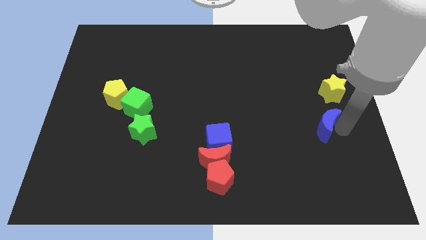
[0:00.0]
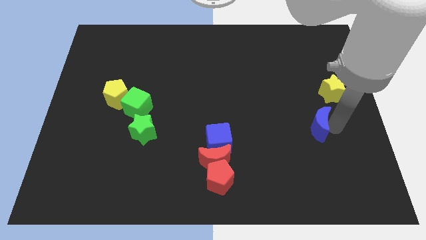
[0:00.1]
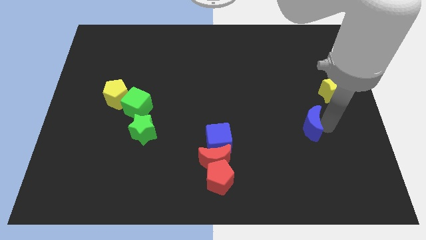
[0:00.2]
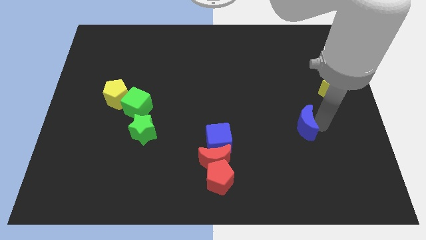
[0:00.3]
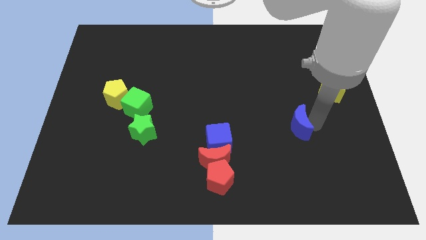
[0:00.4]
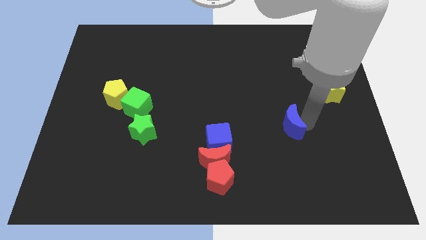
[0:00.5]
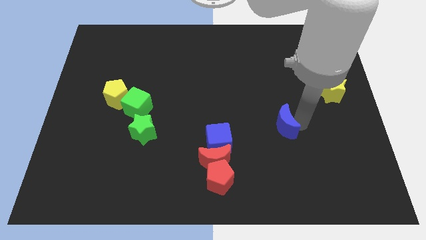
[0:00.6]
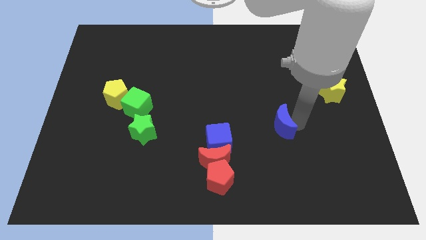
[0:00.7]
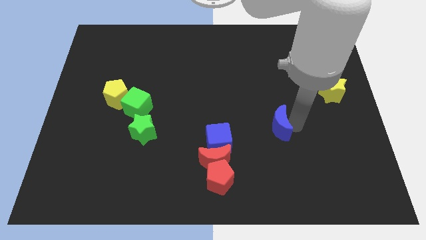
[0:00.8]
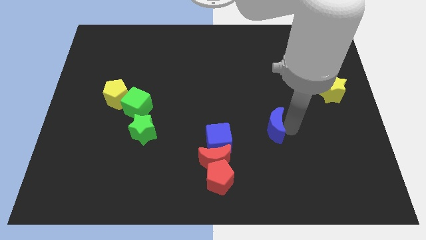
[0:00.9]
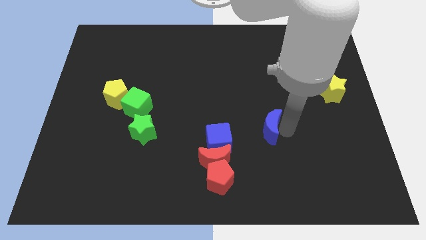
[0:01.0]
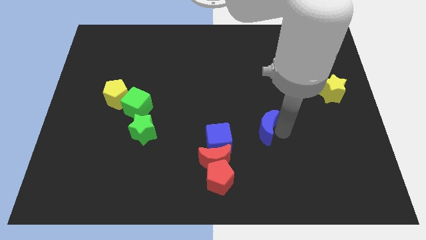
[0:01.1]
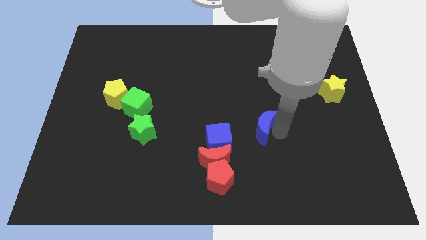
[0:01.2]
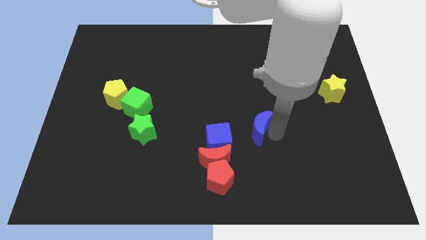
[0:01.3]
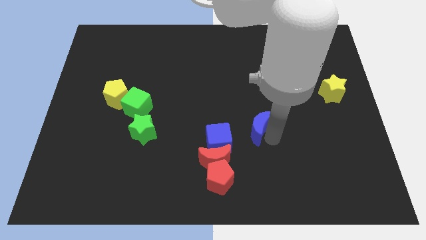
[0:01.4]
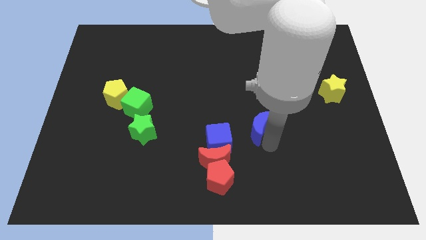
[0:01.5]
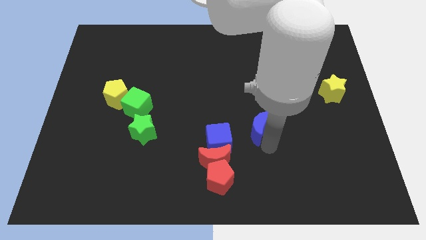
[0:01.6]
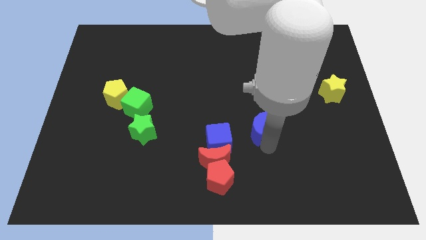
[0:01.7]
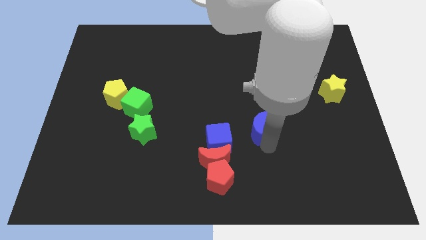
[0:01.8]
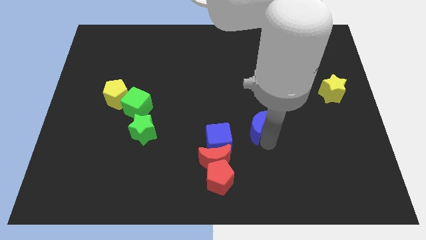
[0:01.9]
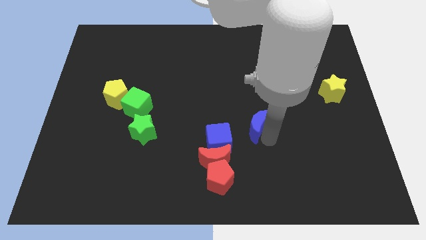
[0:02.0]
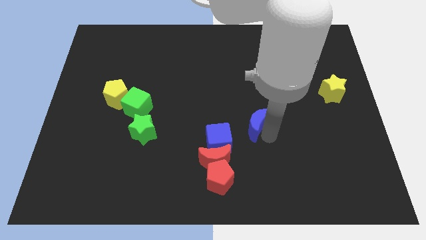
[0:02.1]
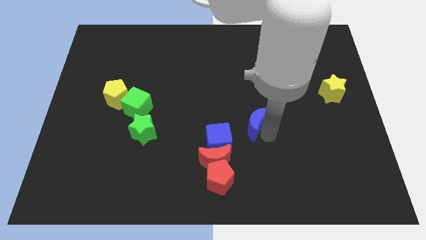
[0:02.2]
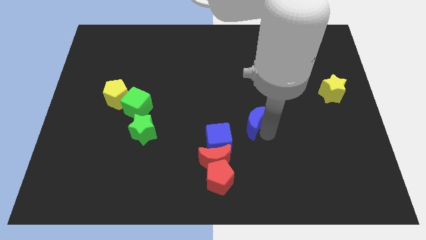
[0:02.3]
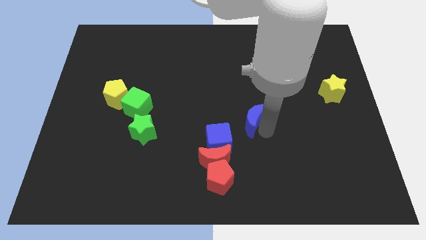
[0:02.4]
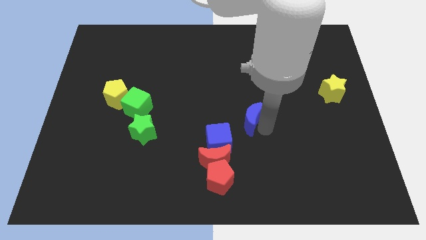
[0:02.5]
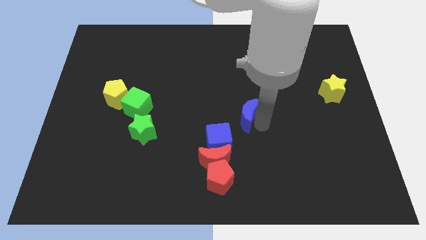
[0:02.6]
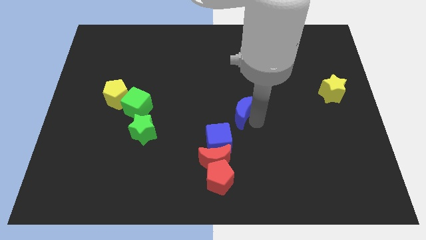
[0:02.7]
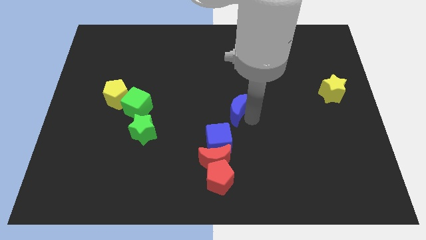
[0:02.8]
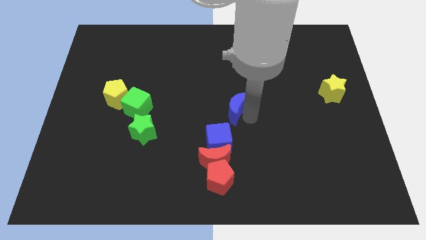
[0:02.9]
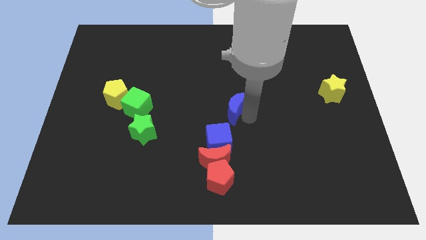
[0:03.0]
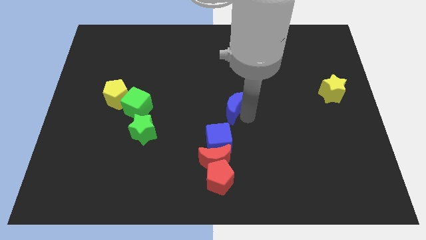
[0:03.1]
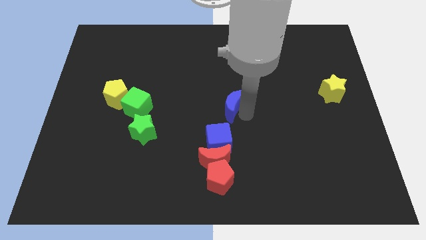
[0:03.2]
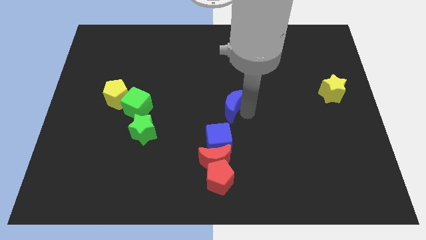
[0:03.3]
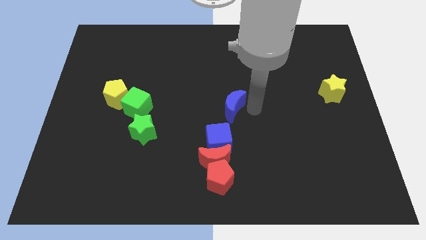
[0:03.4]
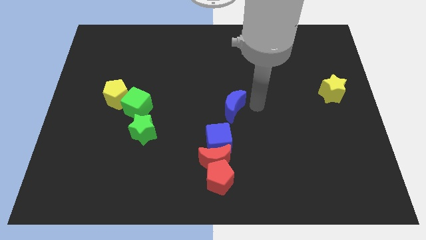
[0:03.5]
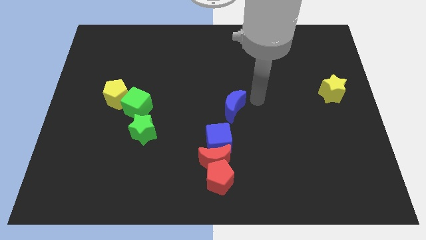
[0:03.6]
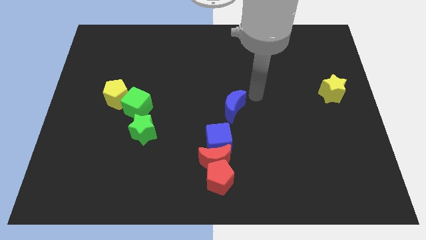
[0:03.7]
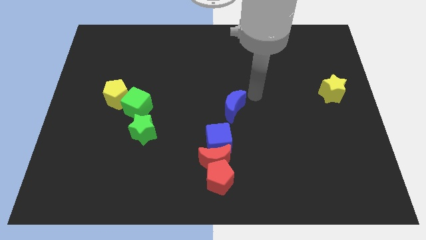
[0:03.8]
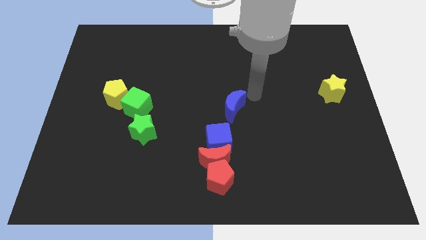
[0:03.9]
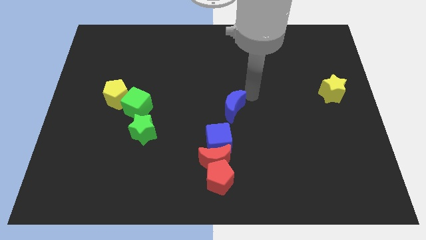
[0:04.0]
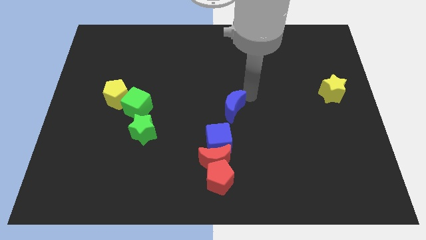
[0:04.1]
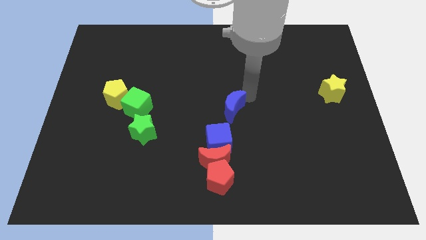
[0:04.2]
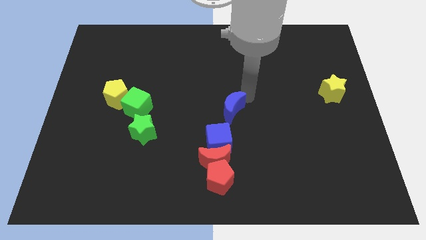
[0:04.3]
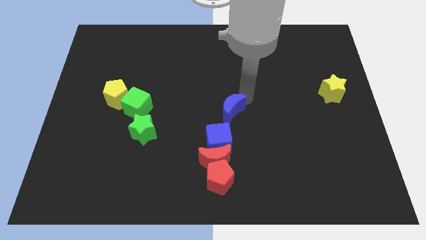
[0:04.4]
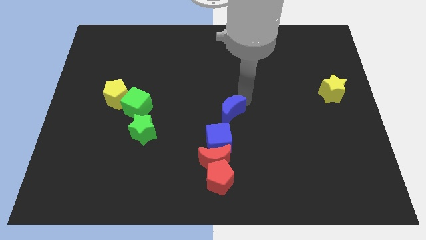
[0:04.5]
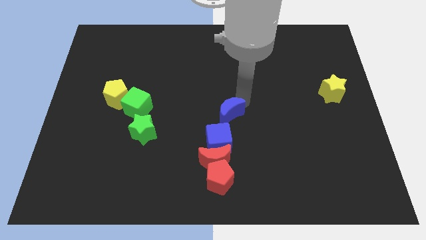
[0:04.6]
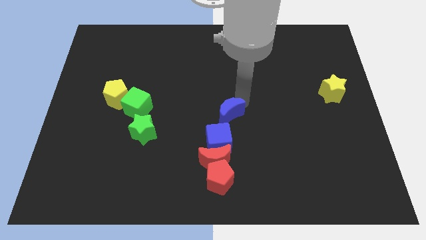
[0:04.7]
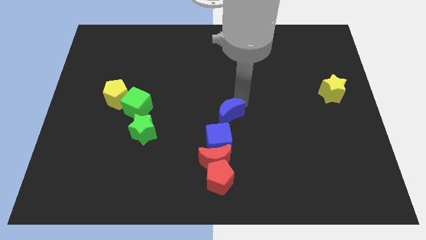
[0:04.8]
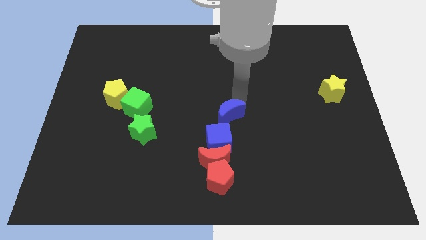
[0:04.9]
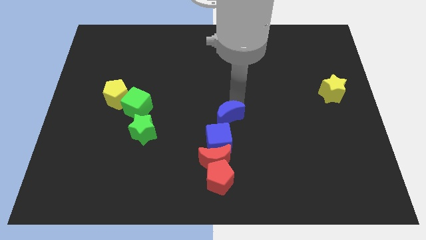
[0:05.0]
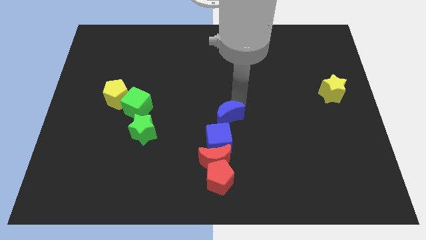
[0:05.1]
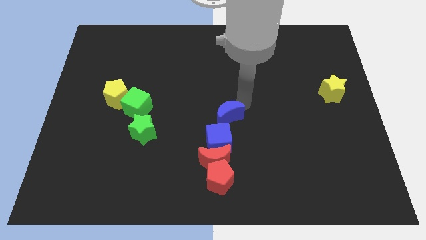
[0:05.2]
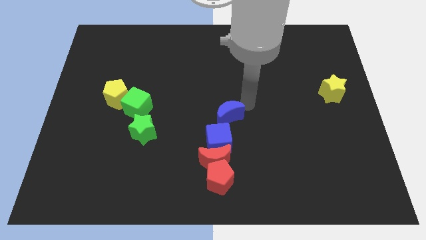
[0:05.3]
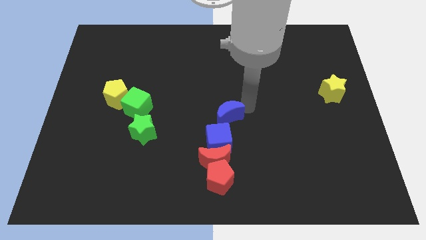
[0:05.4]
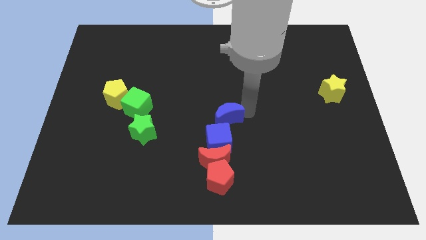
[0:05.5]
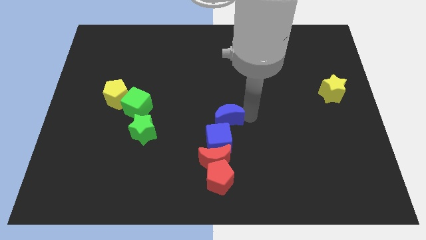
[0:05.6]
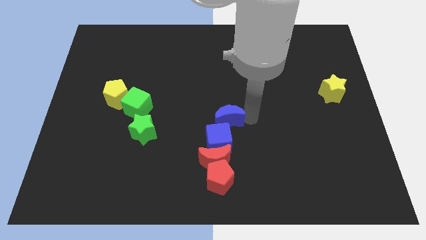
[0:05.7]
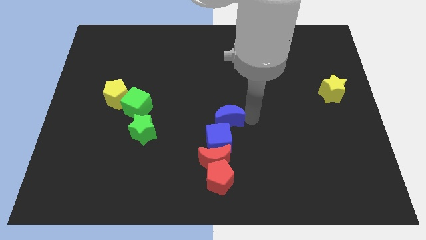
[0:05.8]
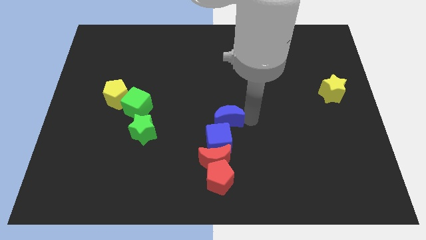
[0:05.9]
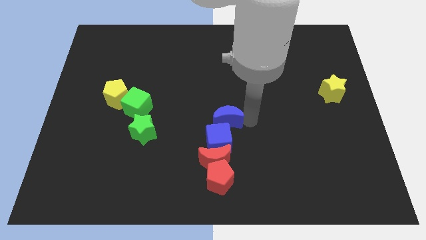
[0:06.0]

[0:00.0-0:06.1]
place blue moon to the center of the board

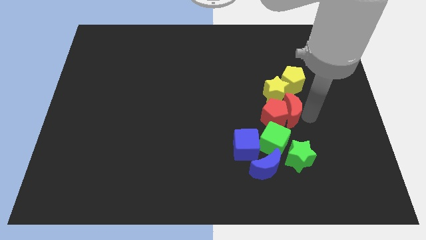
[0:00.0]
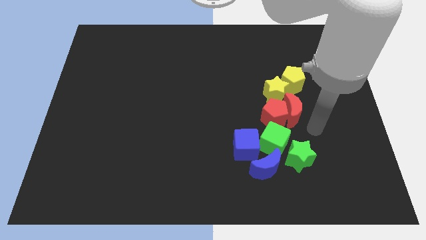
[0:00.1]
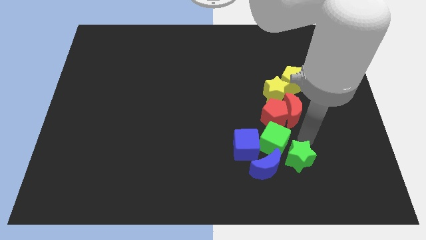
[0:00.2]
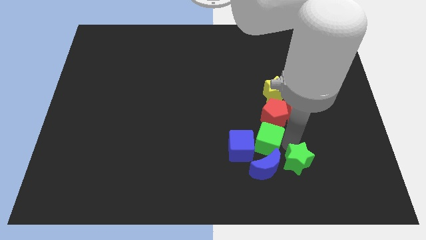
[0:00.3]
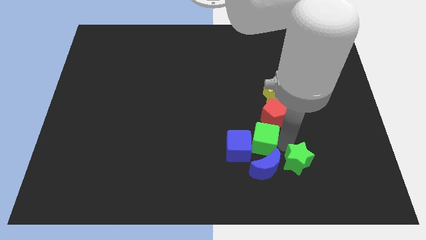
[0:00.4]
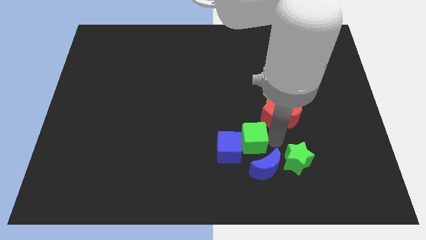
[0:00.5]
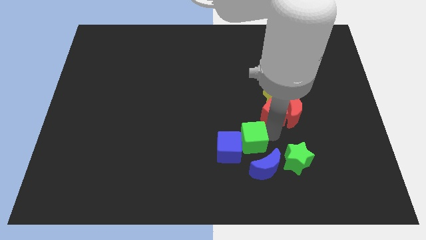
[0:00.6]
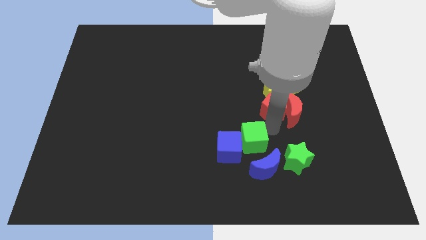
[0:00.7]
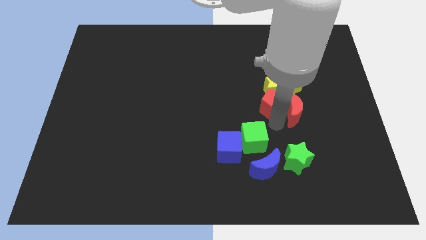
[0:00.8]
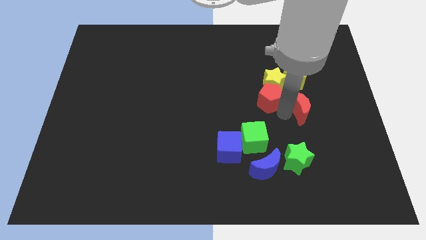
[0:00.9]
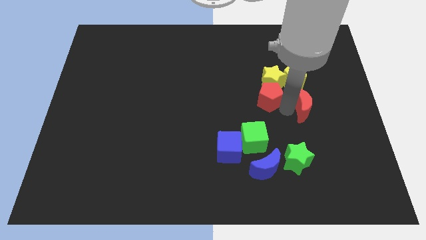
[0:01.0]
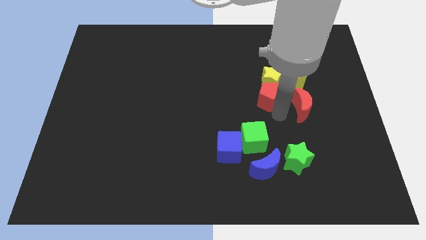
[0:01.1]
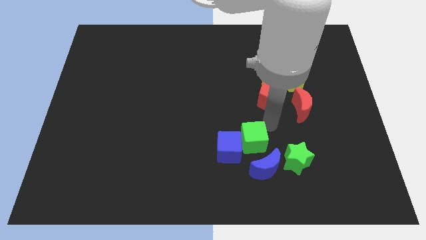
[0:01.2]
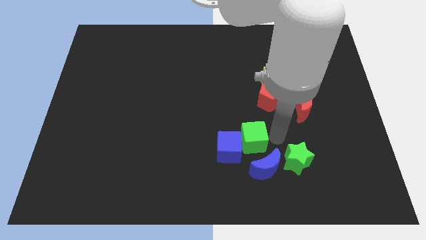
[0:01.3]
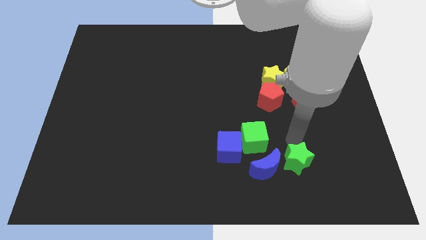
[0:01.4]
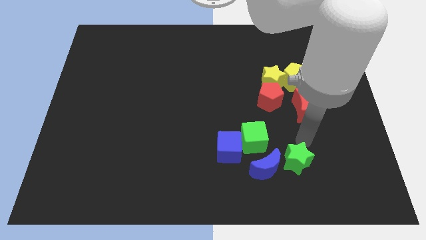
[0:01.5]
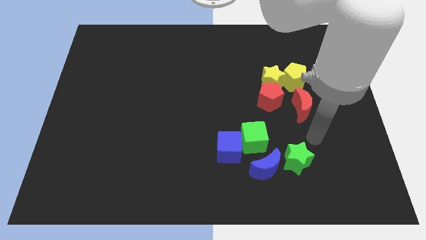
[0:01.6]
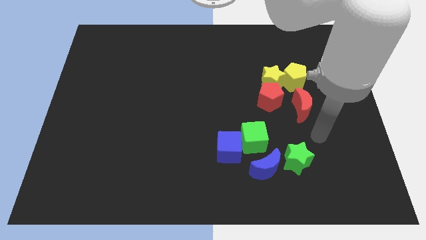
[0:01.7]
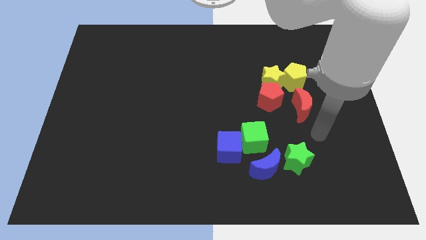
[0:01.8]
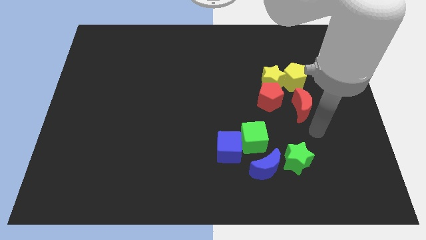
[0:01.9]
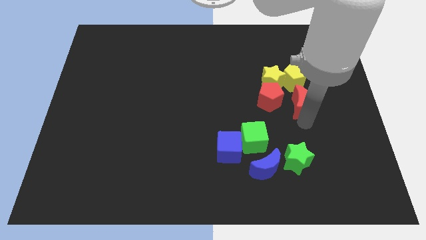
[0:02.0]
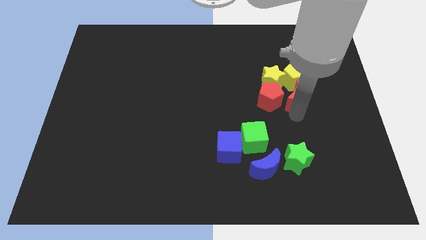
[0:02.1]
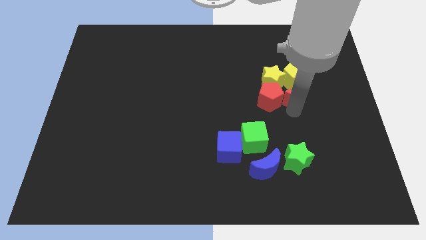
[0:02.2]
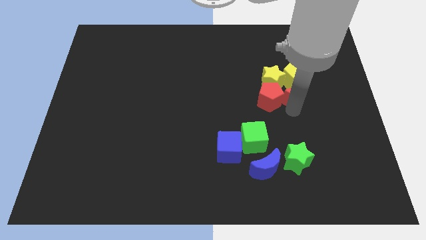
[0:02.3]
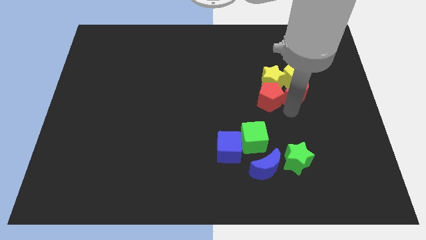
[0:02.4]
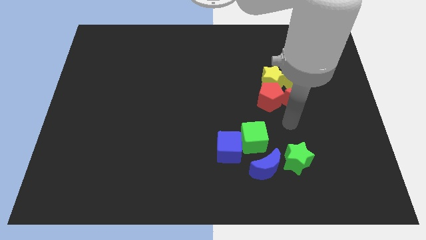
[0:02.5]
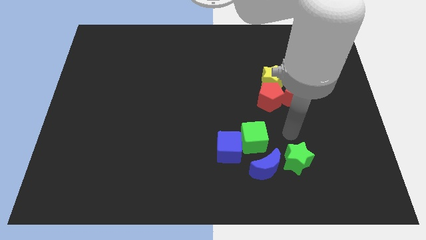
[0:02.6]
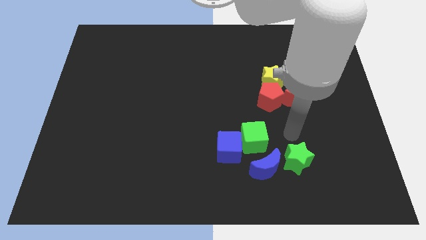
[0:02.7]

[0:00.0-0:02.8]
move the red and yellow blocks slightly up
